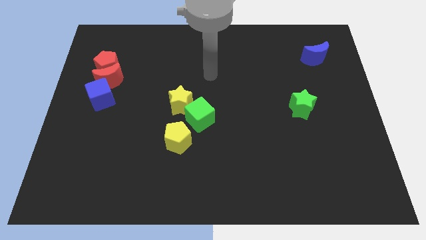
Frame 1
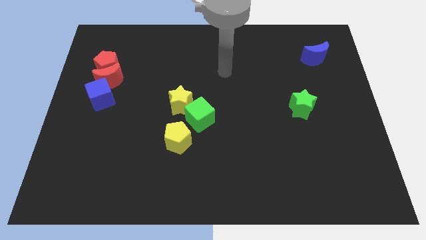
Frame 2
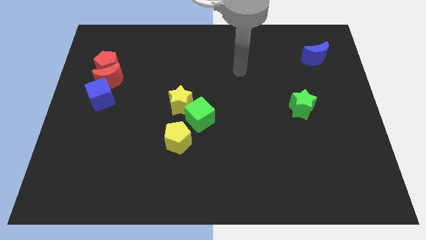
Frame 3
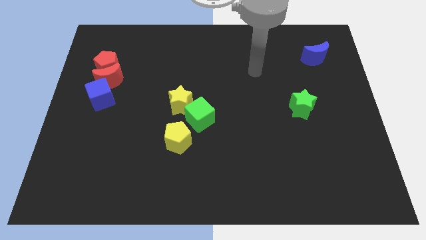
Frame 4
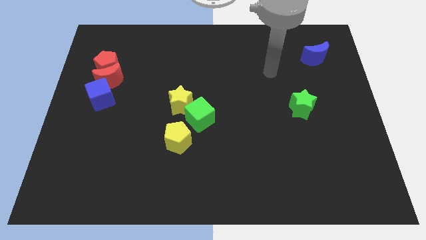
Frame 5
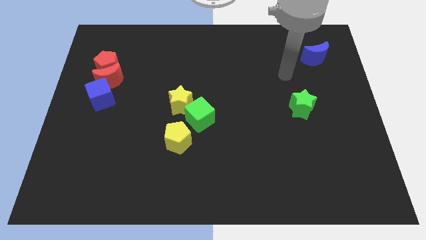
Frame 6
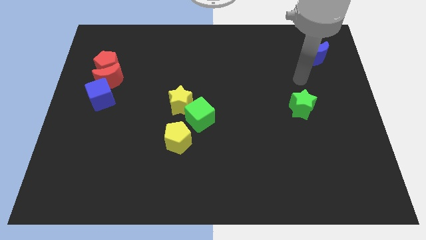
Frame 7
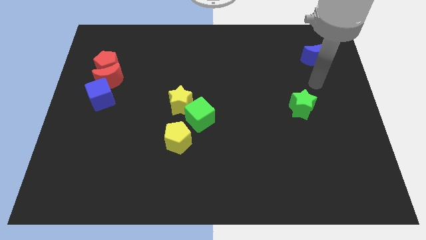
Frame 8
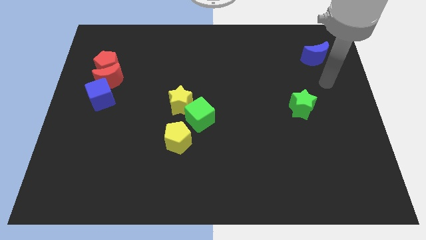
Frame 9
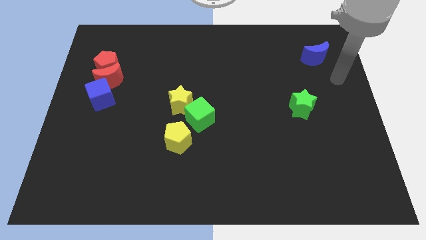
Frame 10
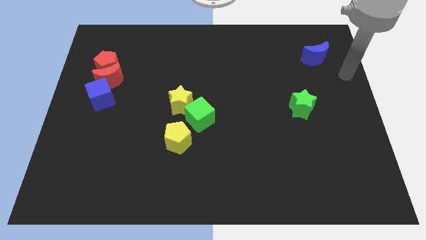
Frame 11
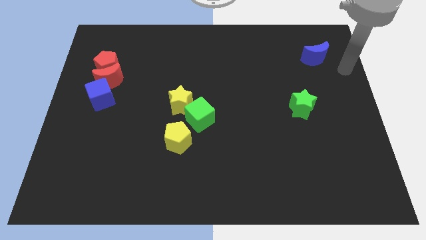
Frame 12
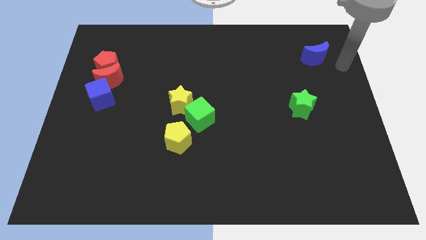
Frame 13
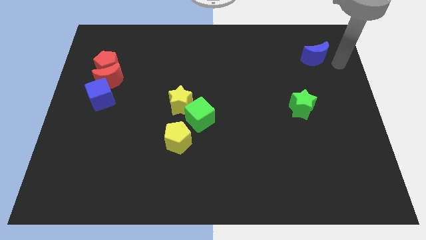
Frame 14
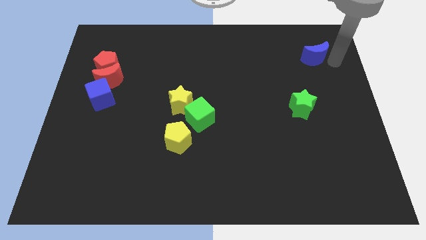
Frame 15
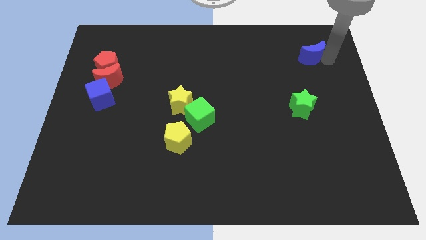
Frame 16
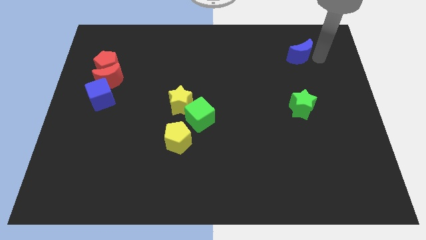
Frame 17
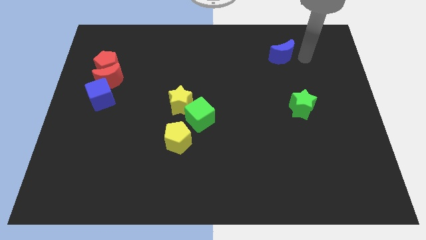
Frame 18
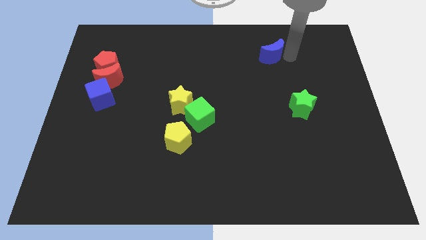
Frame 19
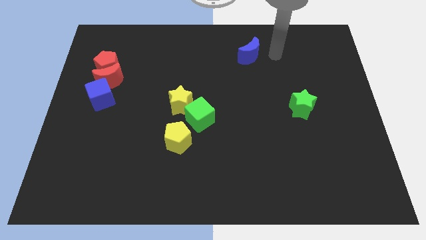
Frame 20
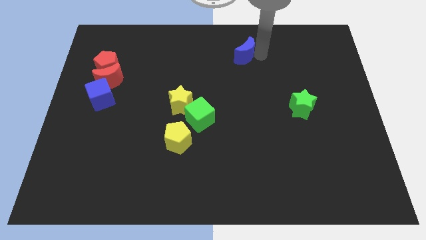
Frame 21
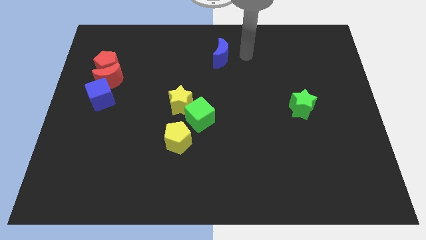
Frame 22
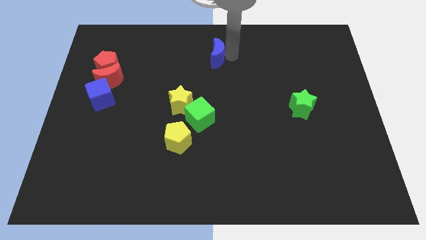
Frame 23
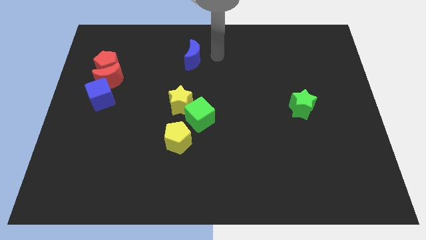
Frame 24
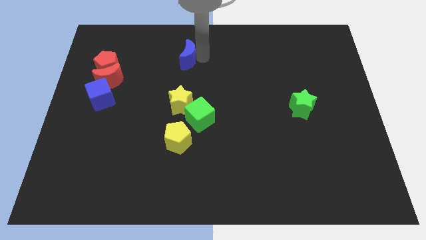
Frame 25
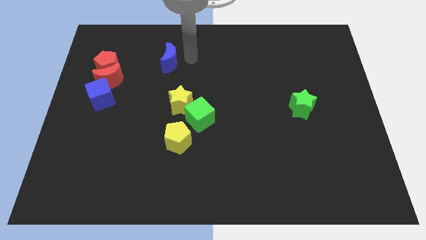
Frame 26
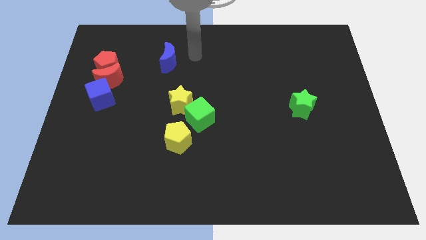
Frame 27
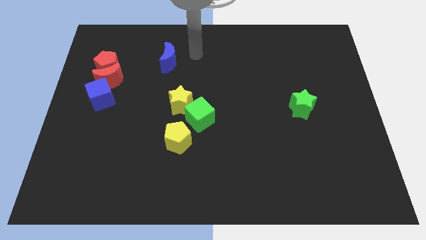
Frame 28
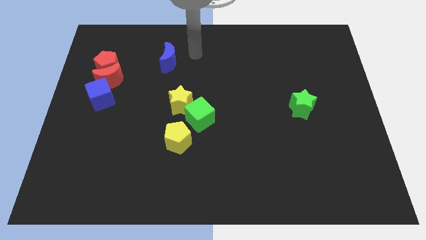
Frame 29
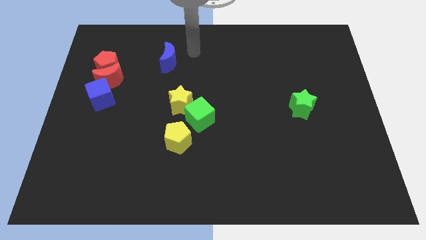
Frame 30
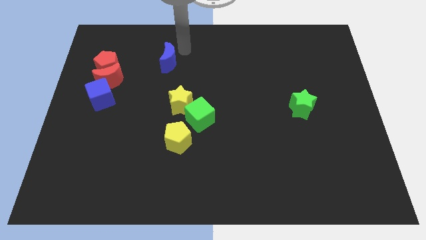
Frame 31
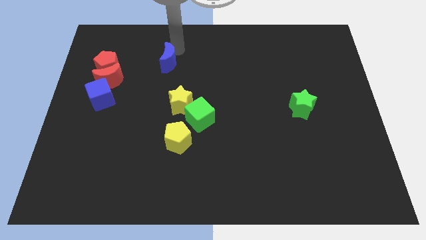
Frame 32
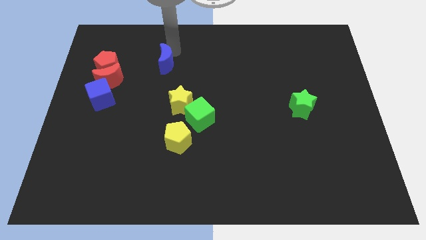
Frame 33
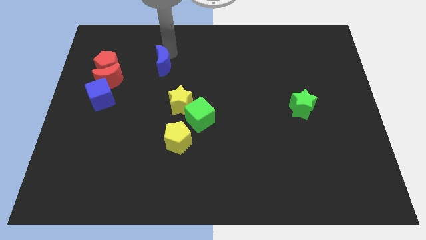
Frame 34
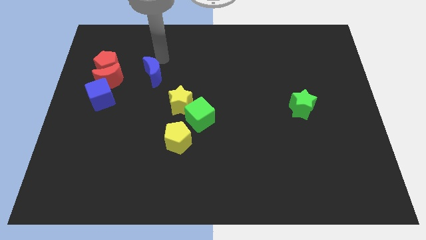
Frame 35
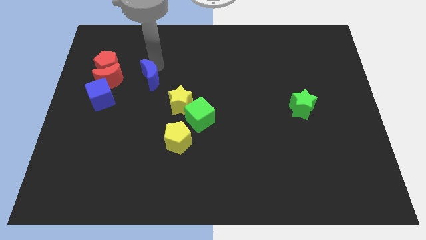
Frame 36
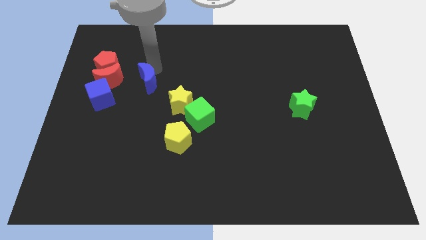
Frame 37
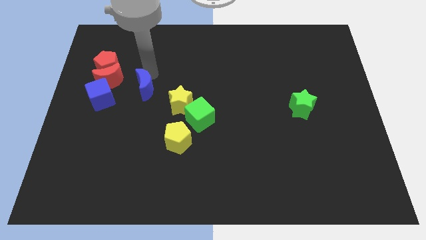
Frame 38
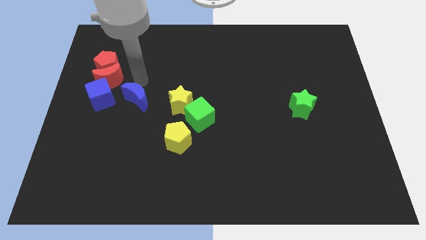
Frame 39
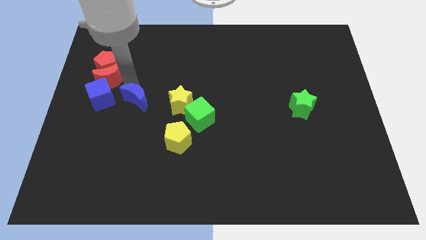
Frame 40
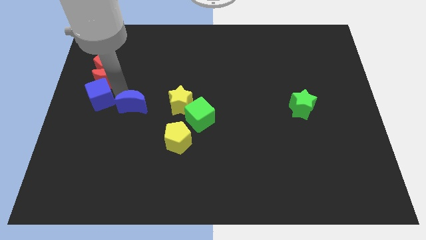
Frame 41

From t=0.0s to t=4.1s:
slide the blue crescent to the right side of the blue cube

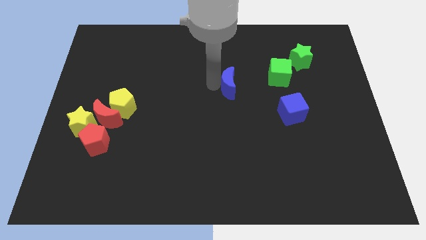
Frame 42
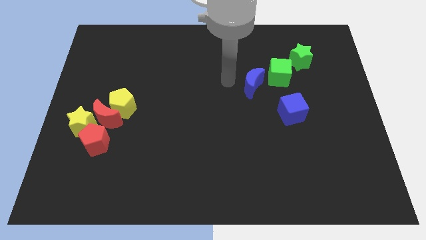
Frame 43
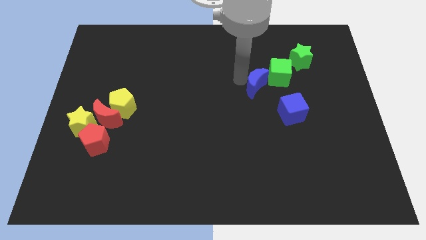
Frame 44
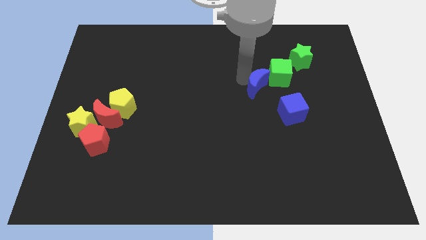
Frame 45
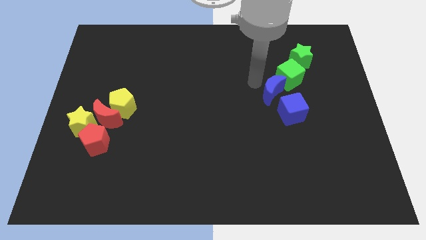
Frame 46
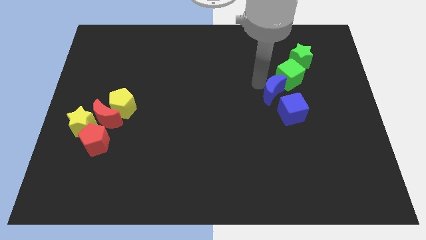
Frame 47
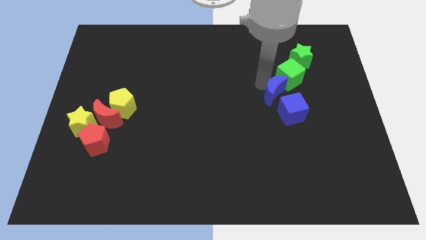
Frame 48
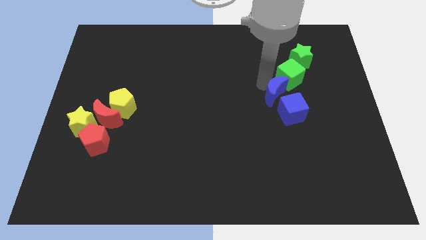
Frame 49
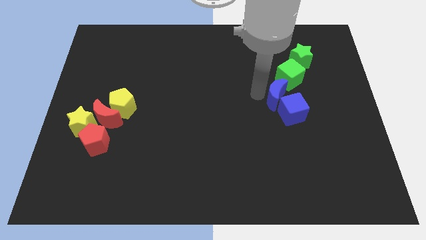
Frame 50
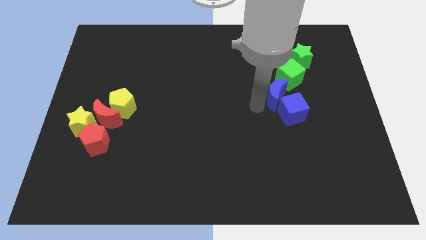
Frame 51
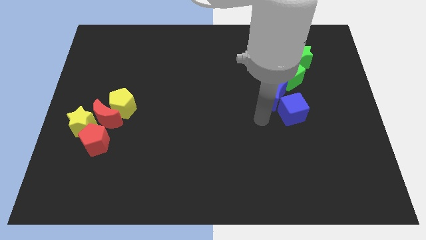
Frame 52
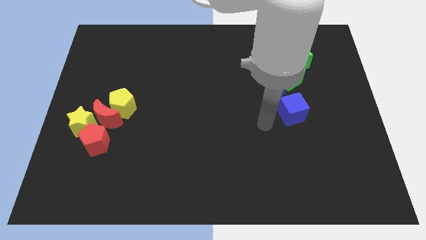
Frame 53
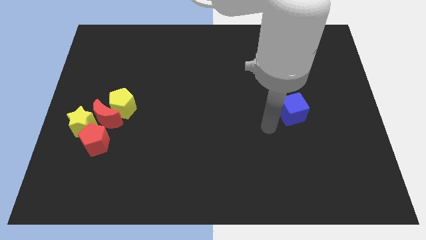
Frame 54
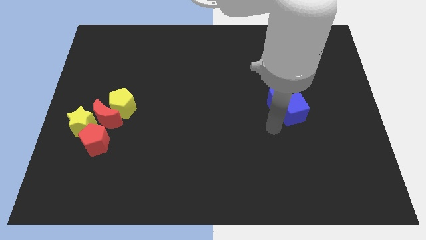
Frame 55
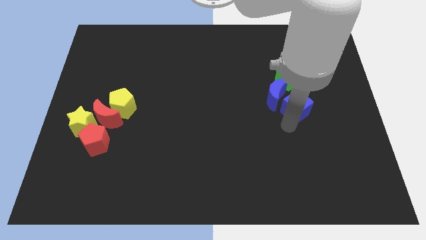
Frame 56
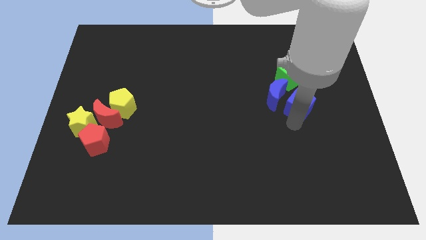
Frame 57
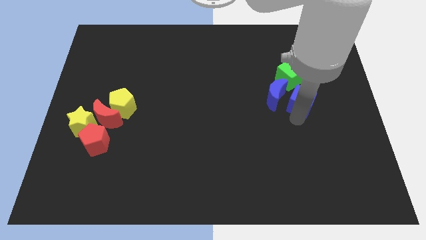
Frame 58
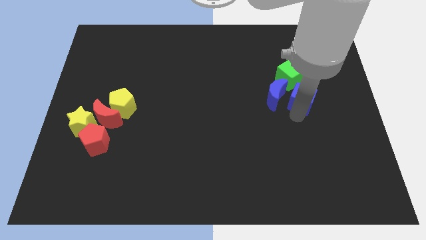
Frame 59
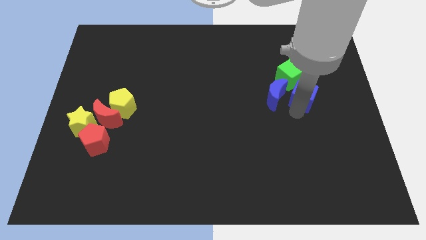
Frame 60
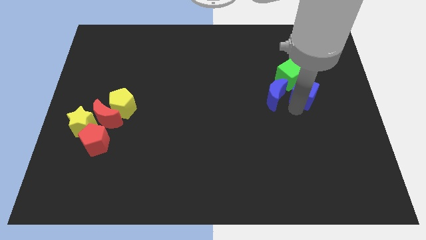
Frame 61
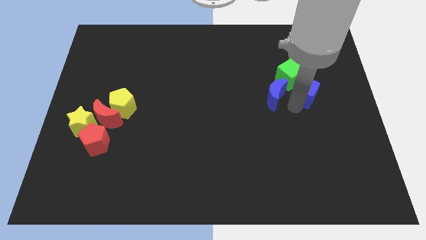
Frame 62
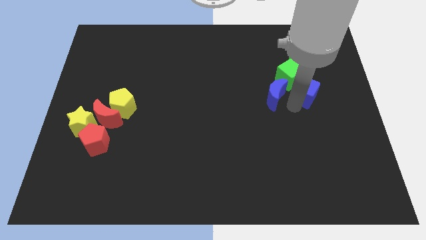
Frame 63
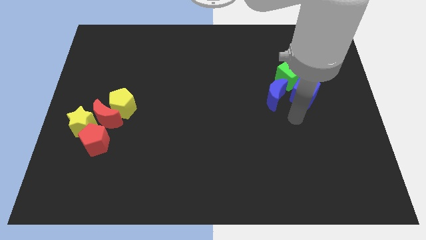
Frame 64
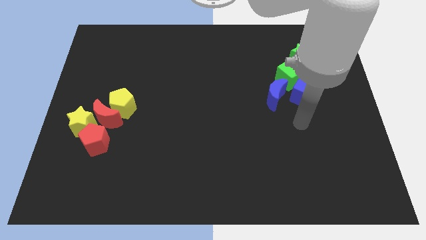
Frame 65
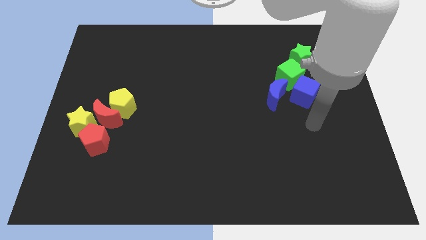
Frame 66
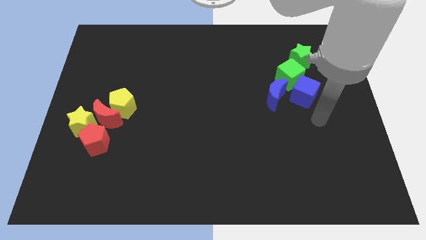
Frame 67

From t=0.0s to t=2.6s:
slightly move the blue cube towards the green cube and blue moon

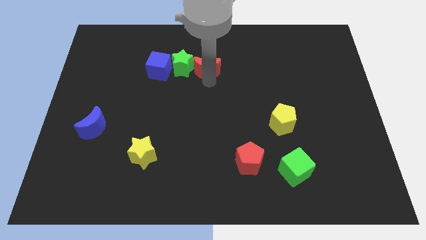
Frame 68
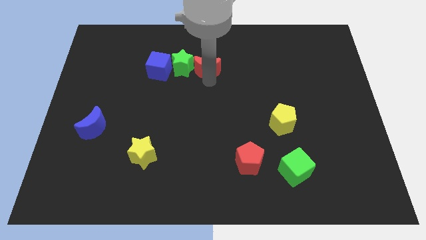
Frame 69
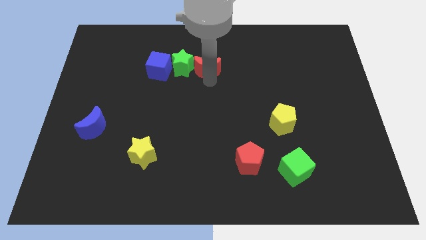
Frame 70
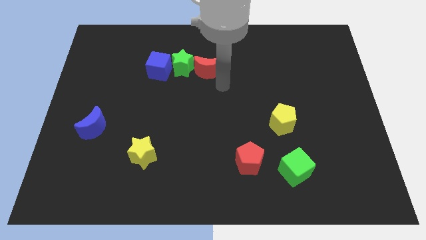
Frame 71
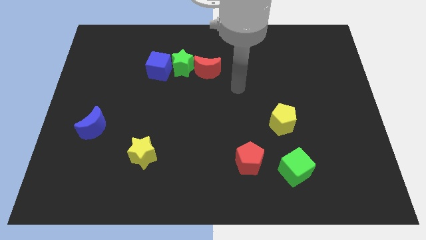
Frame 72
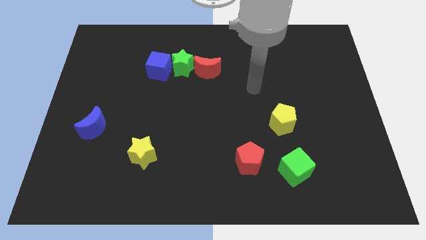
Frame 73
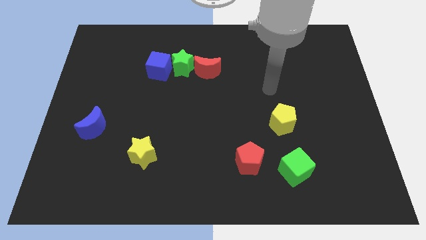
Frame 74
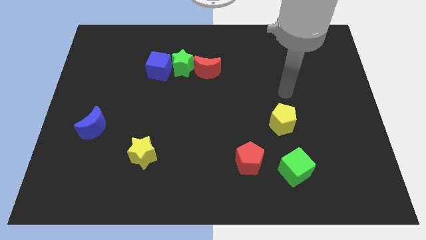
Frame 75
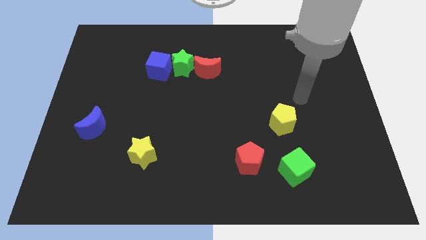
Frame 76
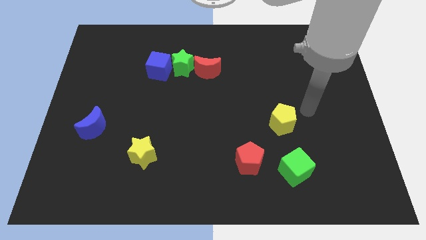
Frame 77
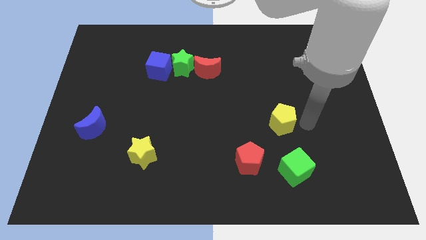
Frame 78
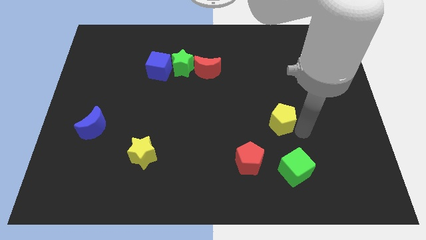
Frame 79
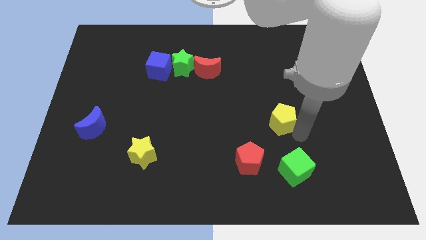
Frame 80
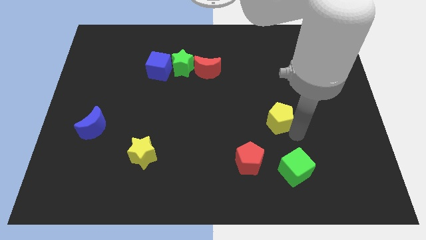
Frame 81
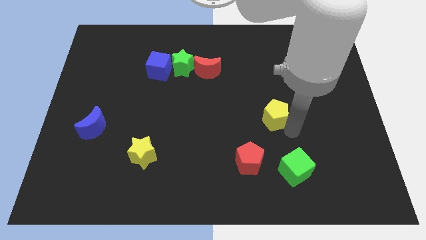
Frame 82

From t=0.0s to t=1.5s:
touch the bottom right of the yellow pentagon

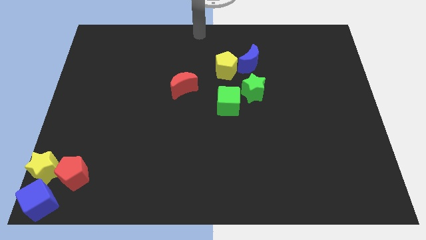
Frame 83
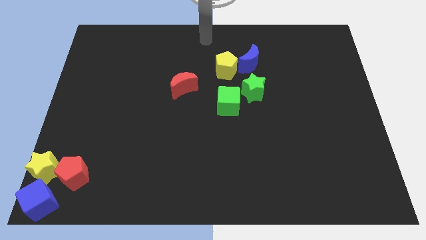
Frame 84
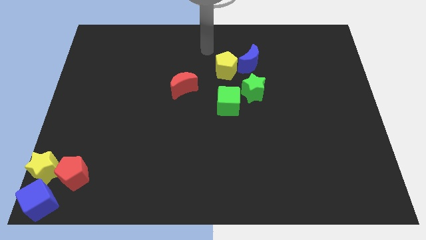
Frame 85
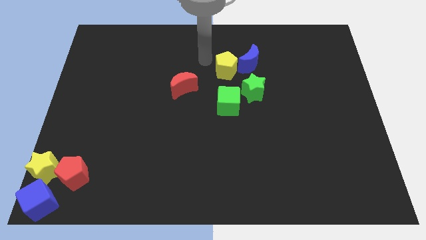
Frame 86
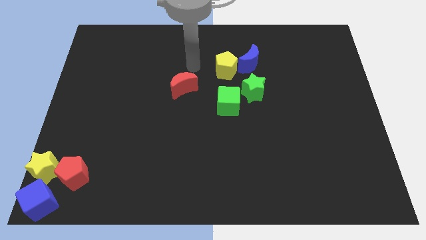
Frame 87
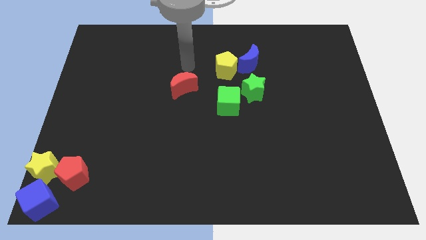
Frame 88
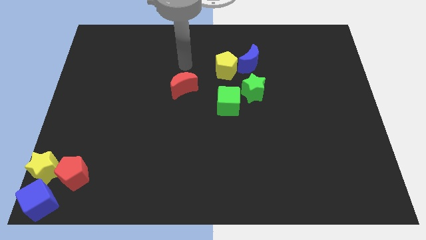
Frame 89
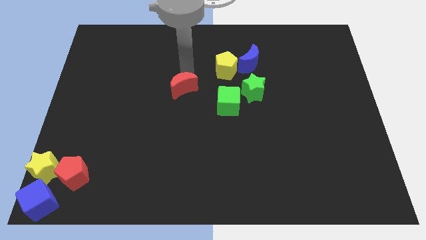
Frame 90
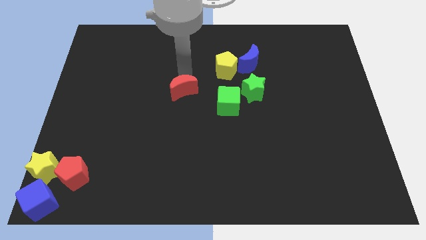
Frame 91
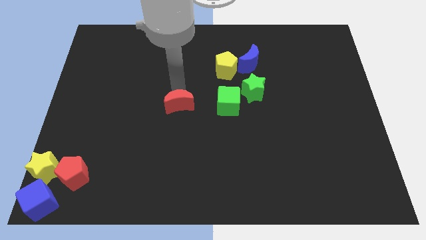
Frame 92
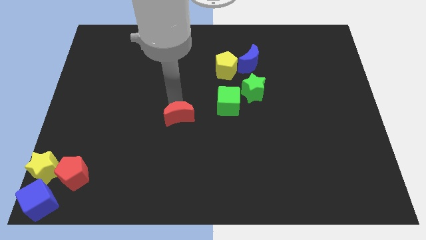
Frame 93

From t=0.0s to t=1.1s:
place red moon in the center
